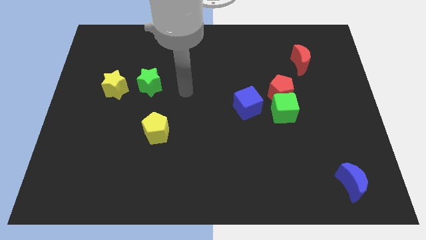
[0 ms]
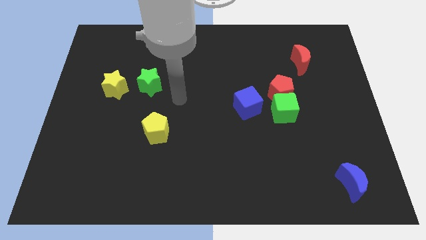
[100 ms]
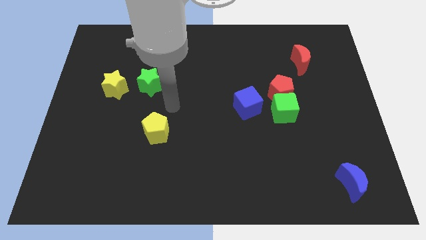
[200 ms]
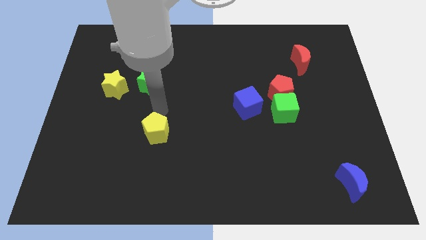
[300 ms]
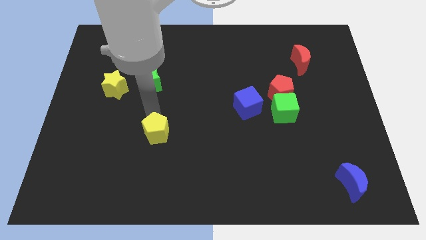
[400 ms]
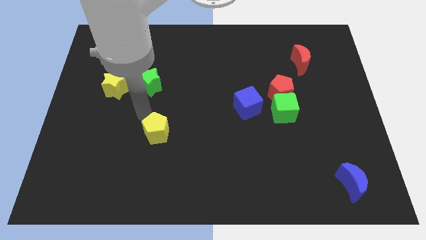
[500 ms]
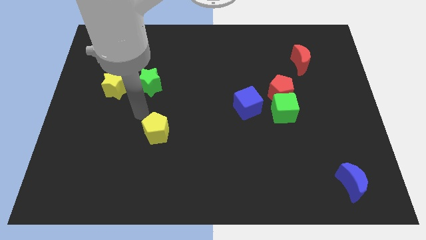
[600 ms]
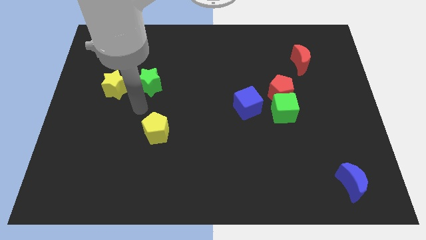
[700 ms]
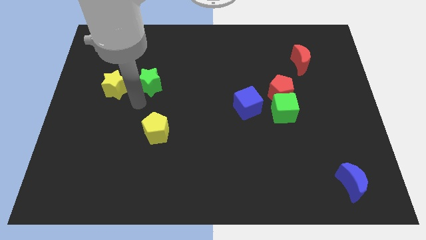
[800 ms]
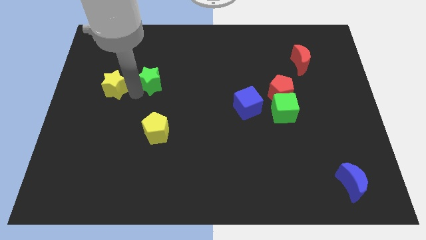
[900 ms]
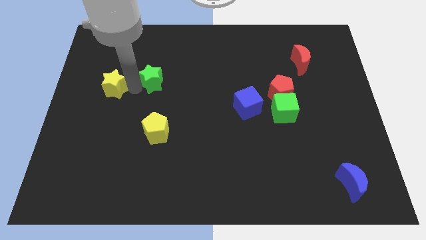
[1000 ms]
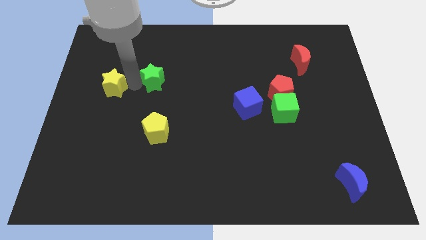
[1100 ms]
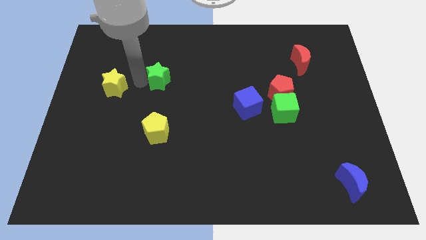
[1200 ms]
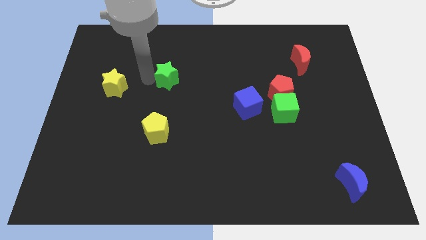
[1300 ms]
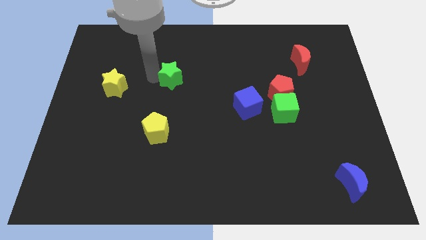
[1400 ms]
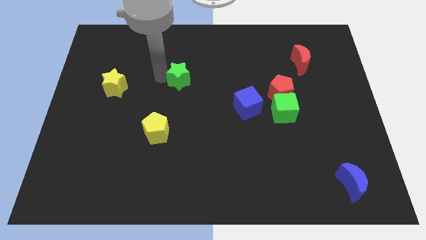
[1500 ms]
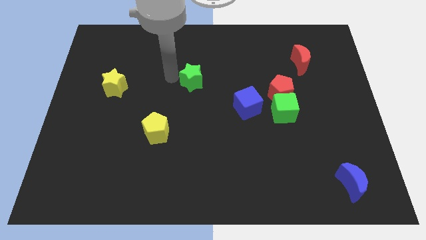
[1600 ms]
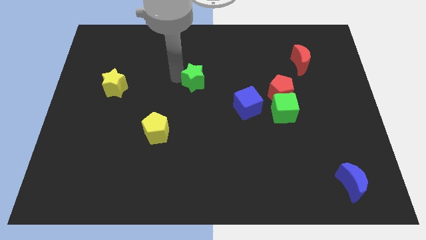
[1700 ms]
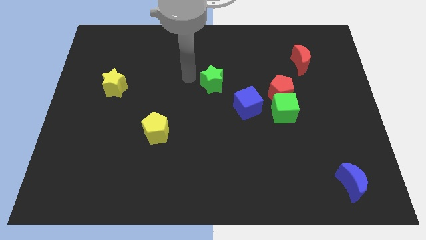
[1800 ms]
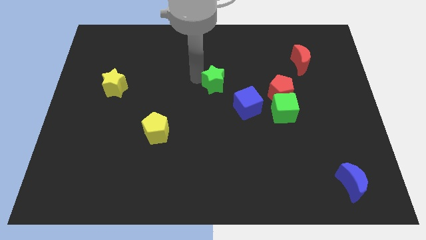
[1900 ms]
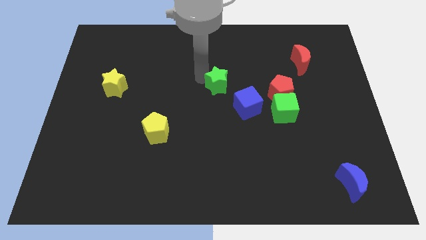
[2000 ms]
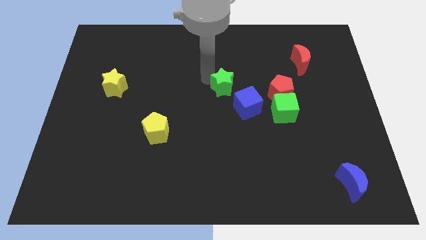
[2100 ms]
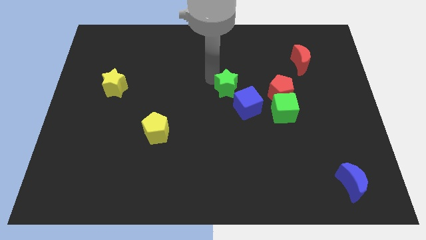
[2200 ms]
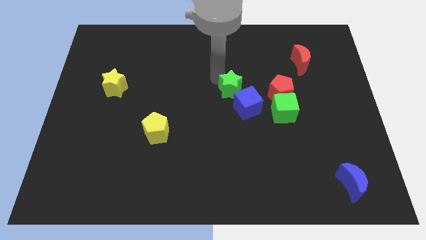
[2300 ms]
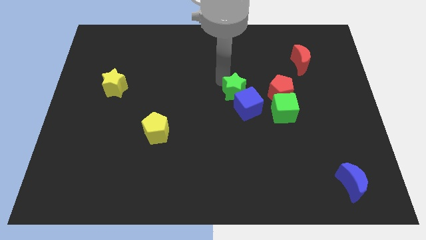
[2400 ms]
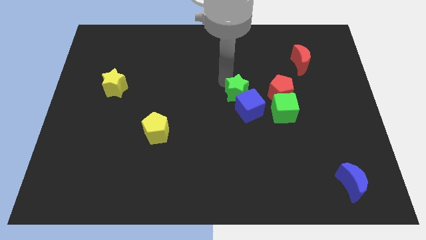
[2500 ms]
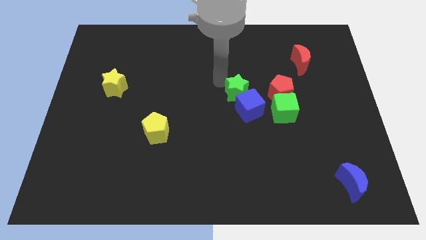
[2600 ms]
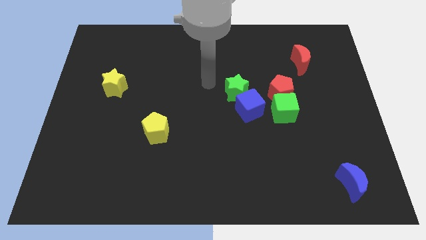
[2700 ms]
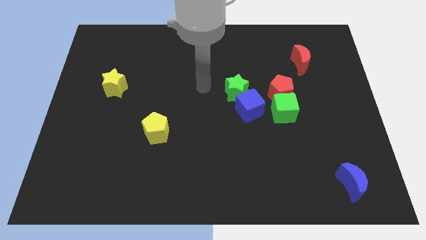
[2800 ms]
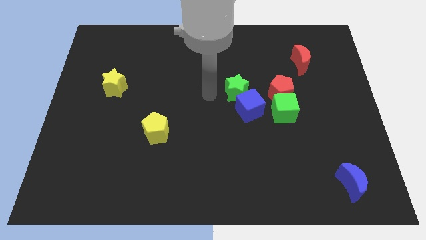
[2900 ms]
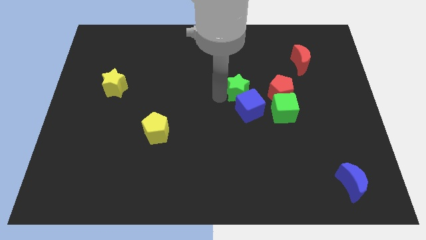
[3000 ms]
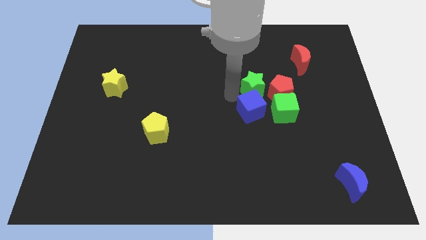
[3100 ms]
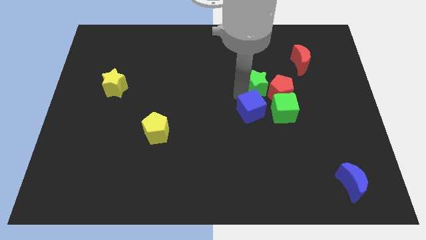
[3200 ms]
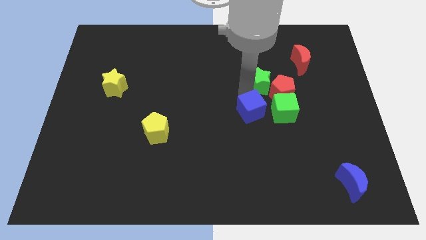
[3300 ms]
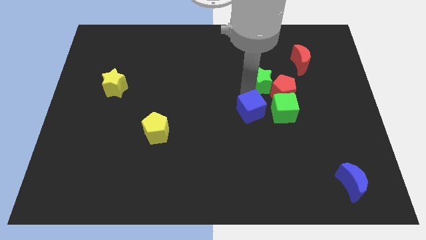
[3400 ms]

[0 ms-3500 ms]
put the green star to the red pentagon

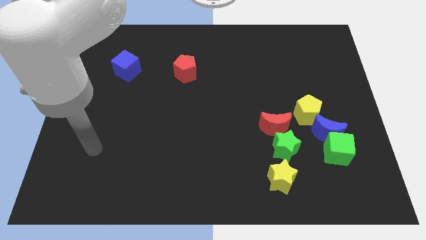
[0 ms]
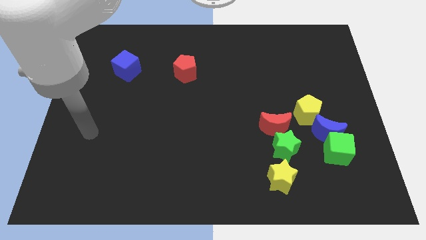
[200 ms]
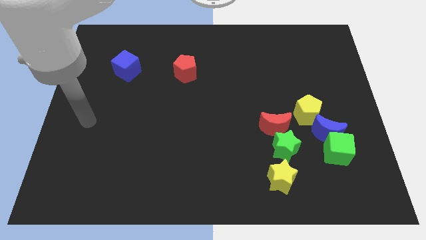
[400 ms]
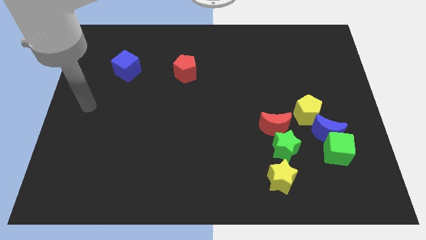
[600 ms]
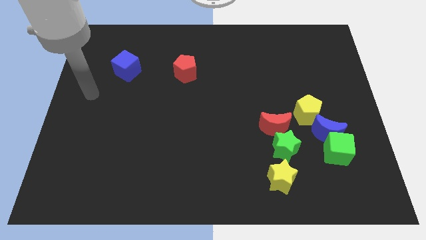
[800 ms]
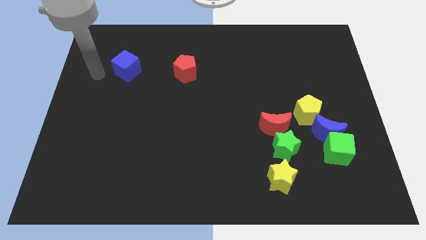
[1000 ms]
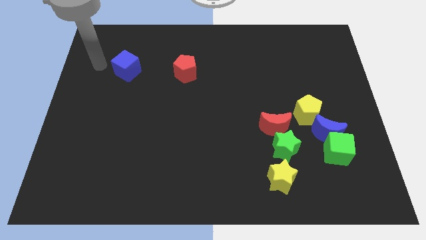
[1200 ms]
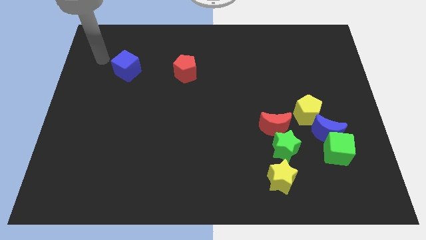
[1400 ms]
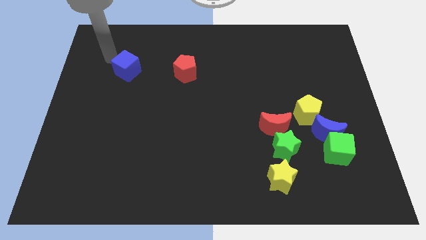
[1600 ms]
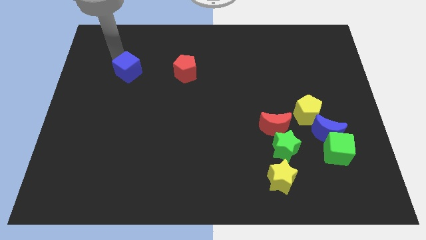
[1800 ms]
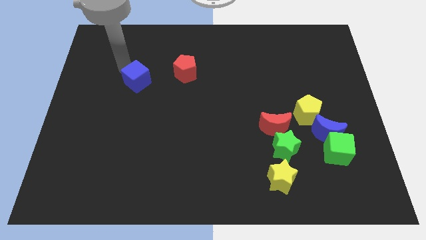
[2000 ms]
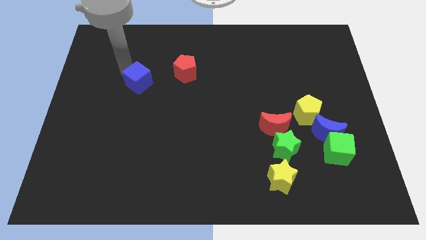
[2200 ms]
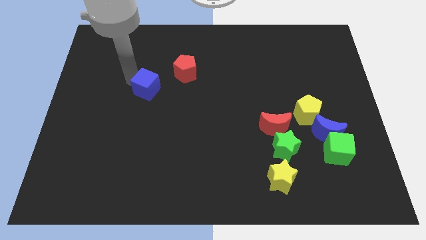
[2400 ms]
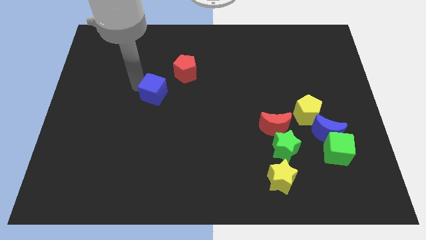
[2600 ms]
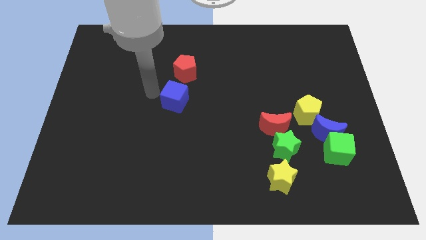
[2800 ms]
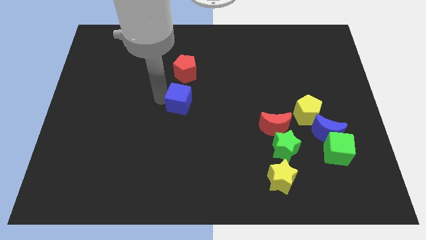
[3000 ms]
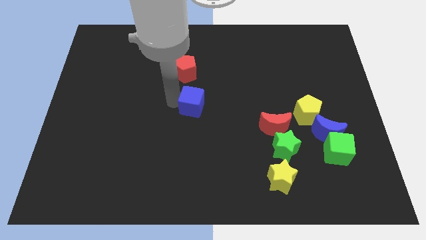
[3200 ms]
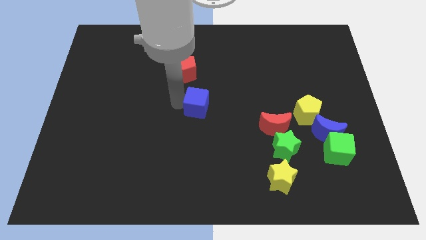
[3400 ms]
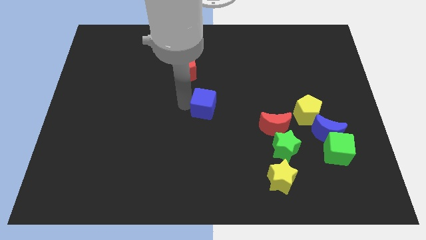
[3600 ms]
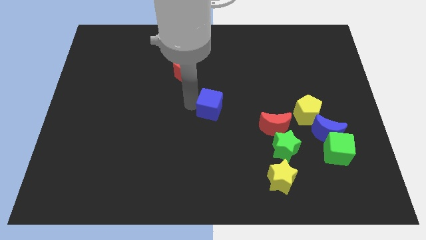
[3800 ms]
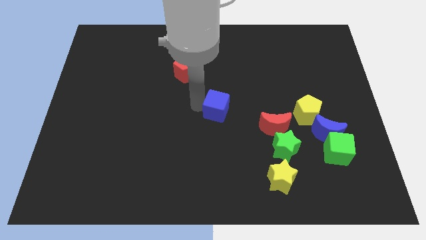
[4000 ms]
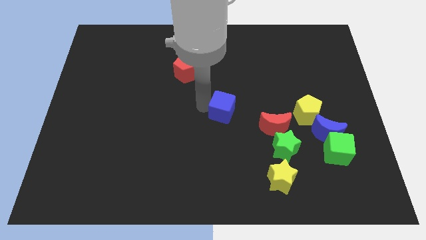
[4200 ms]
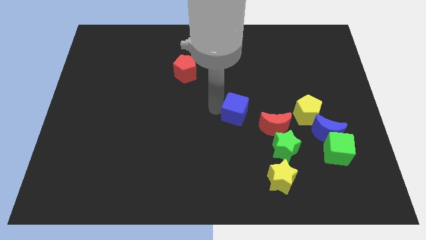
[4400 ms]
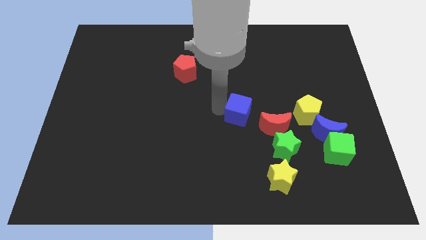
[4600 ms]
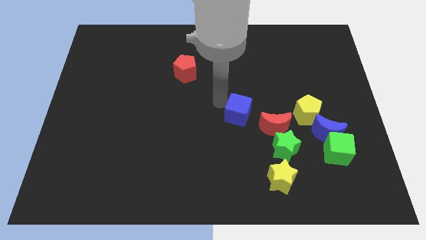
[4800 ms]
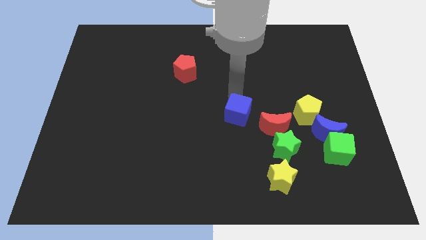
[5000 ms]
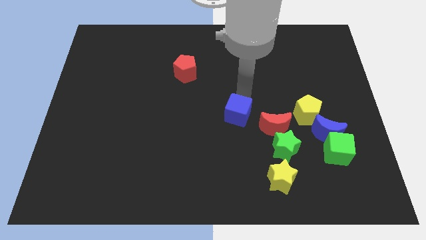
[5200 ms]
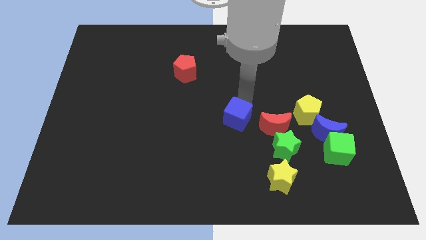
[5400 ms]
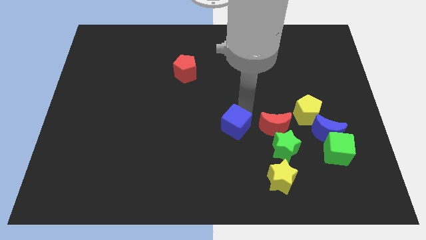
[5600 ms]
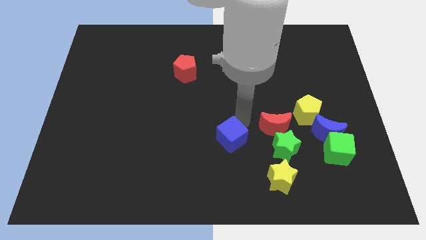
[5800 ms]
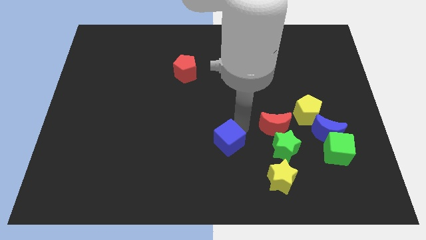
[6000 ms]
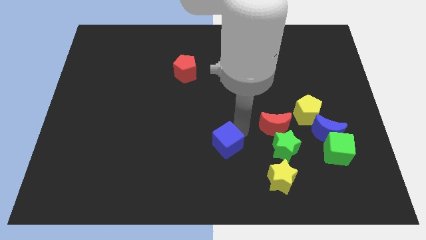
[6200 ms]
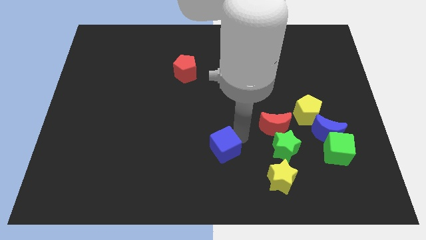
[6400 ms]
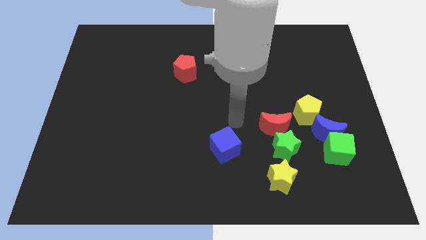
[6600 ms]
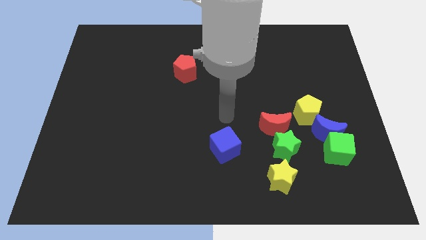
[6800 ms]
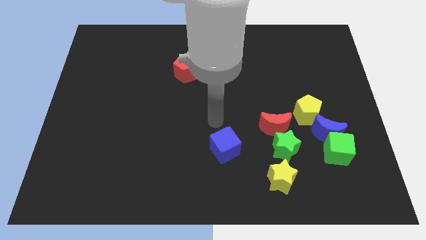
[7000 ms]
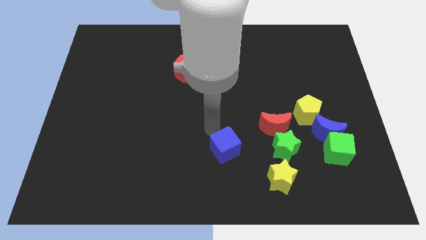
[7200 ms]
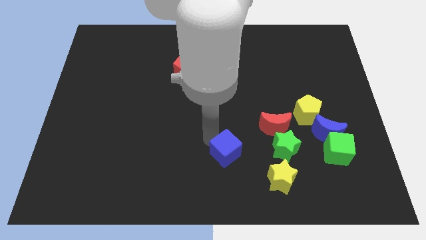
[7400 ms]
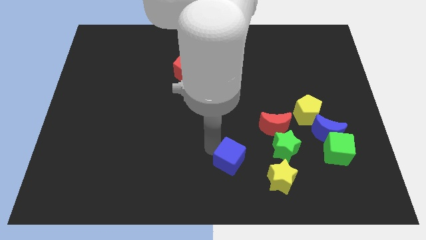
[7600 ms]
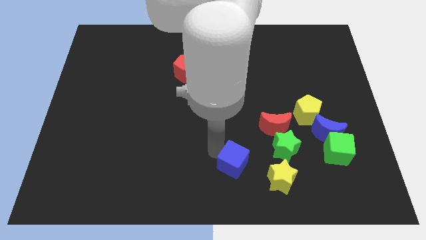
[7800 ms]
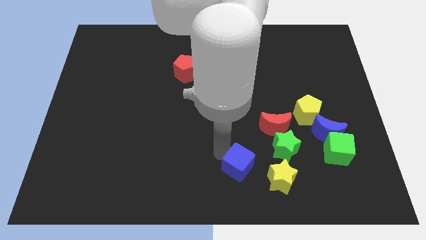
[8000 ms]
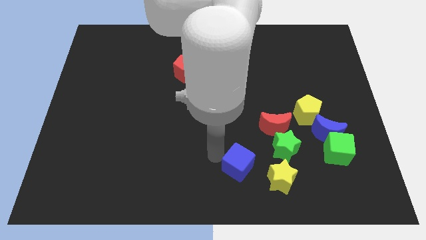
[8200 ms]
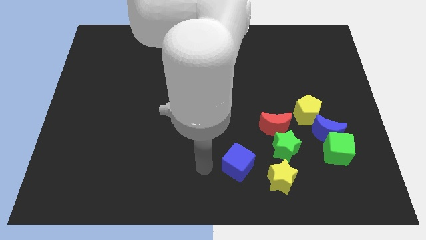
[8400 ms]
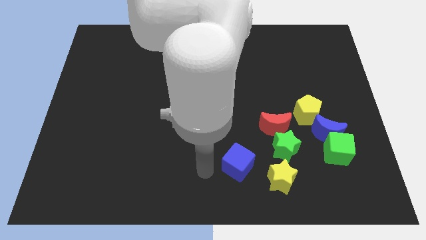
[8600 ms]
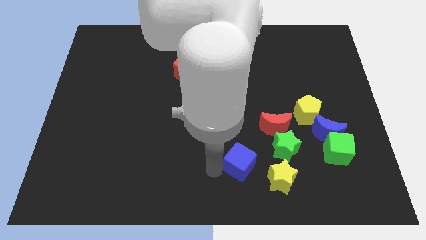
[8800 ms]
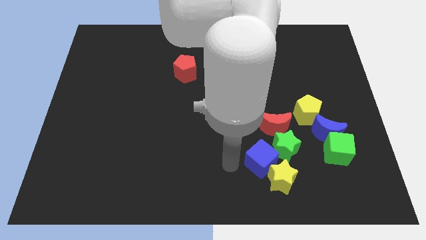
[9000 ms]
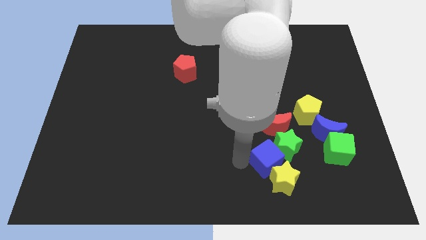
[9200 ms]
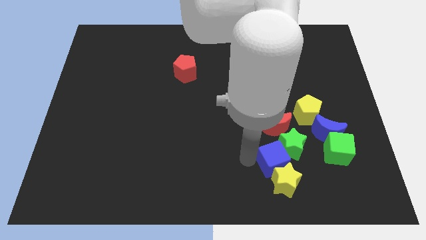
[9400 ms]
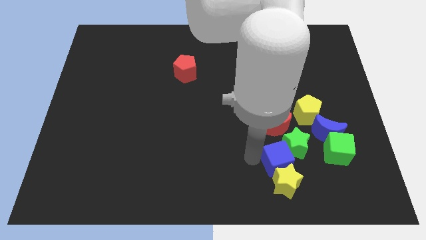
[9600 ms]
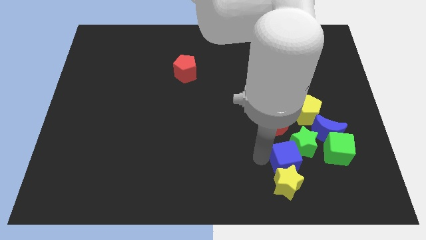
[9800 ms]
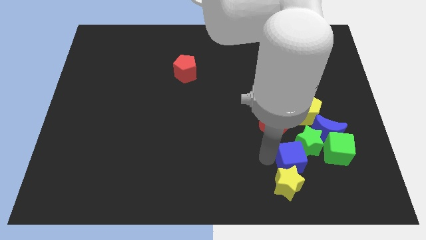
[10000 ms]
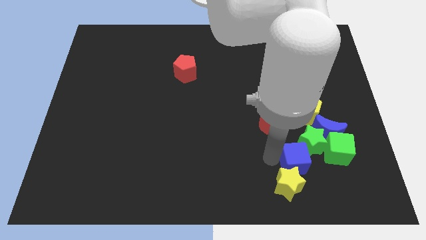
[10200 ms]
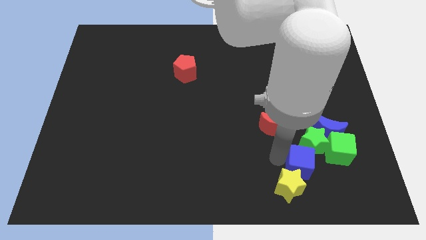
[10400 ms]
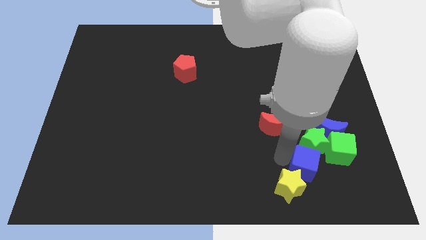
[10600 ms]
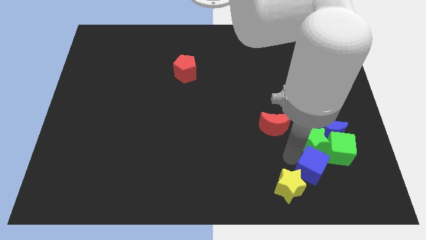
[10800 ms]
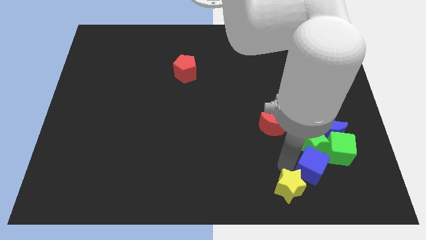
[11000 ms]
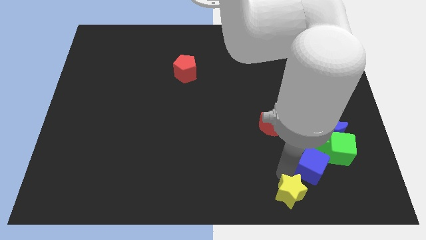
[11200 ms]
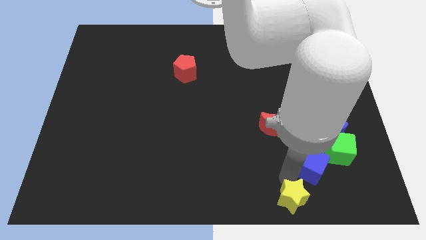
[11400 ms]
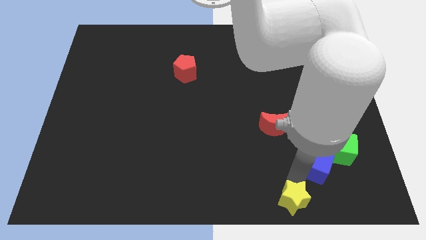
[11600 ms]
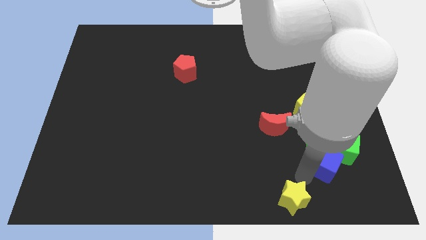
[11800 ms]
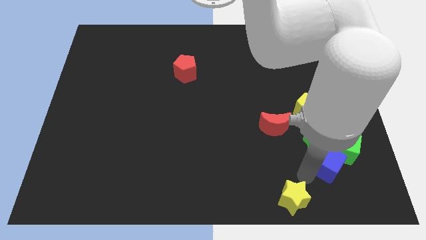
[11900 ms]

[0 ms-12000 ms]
push the blue cube next to the green cube
